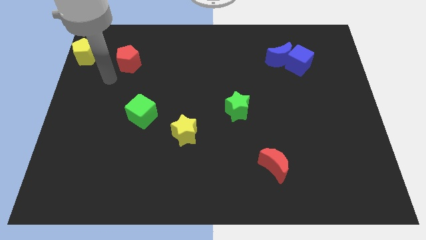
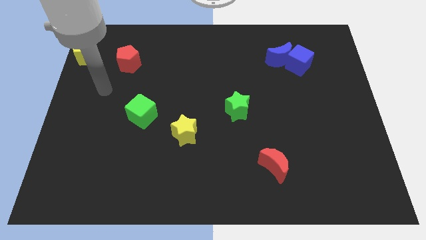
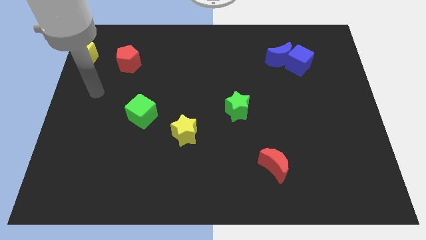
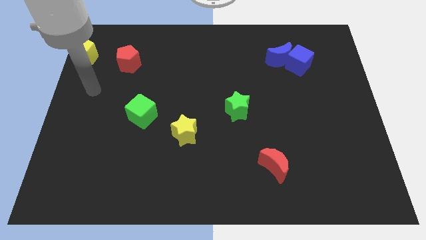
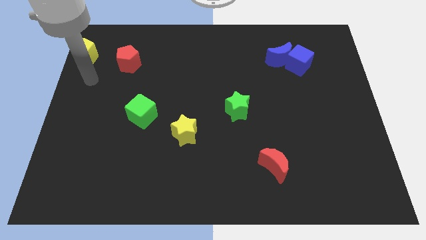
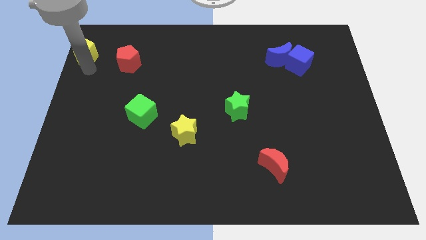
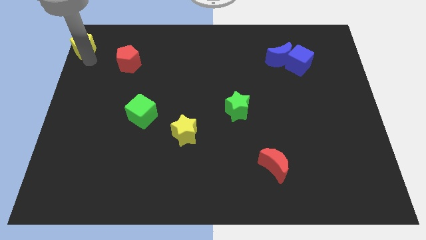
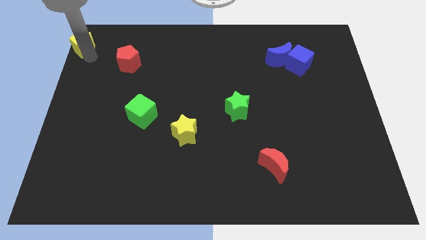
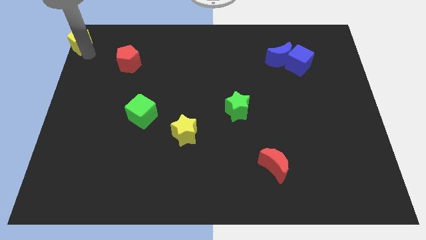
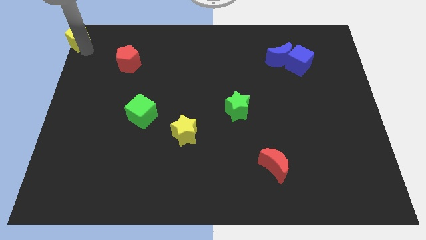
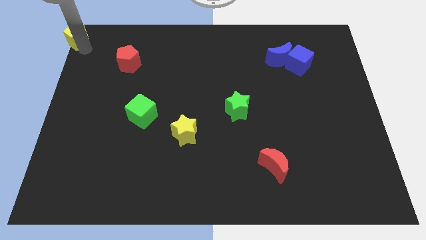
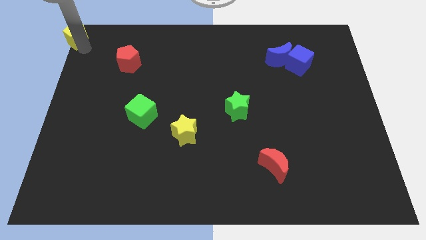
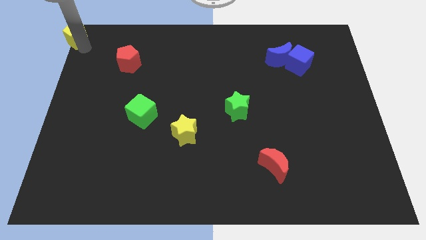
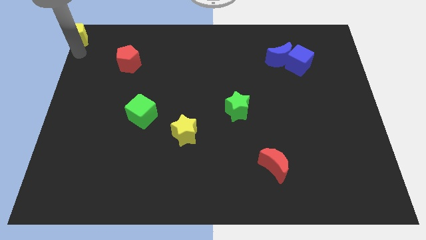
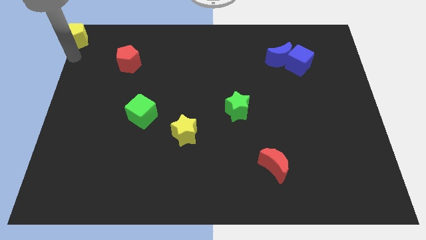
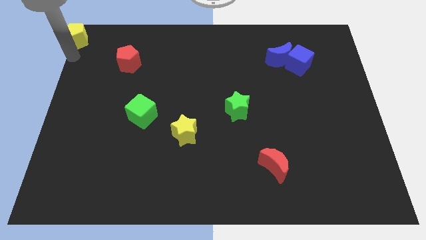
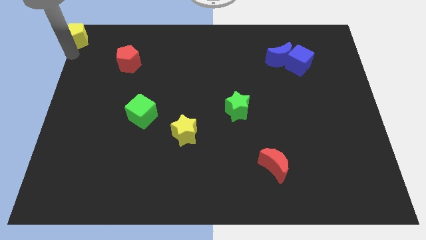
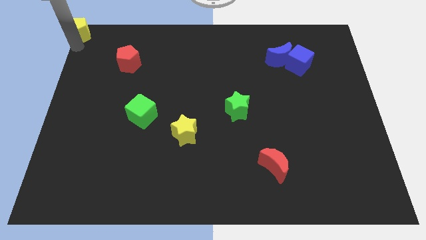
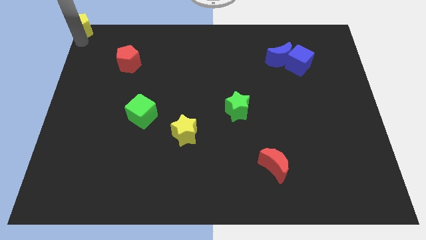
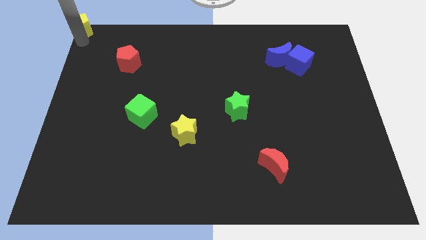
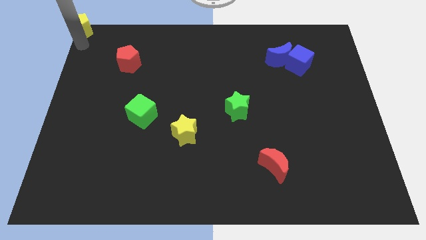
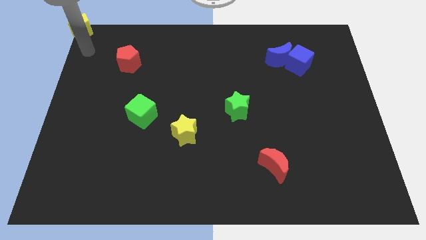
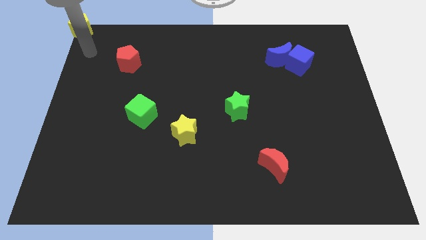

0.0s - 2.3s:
place yellow pentagon to the top left corner of board

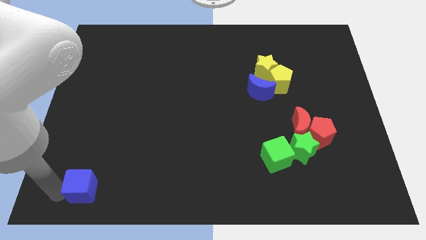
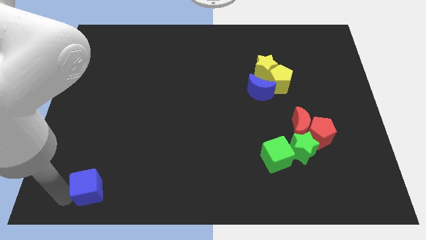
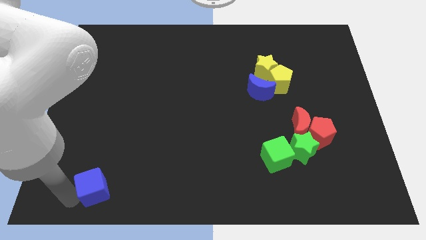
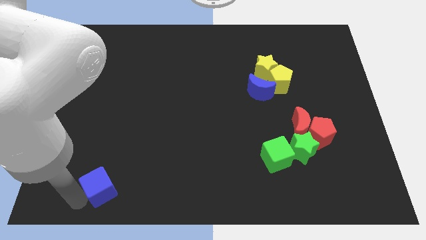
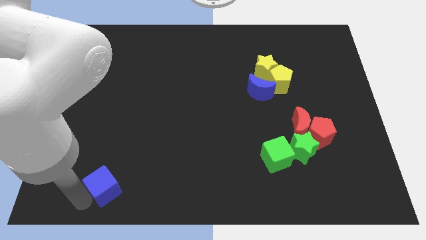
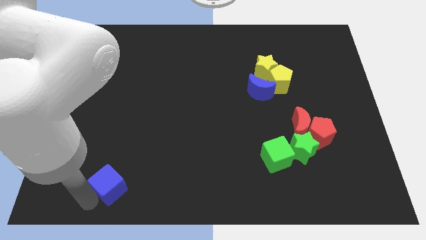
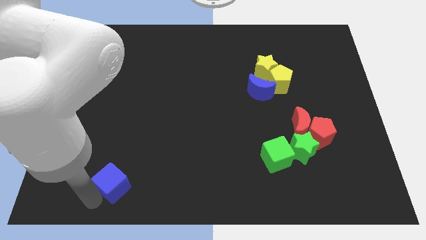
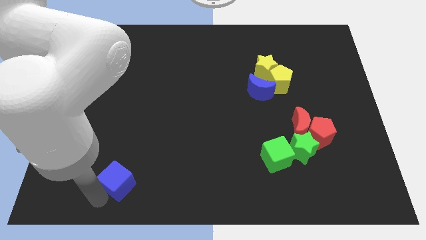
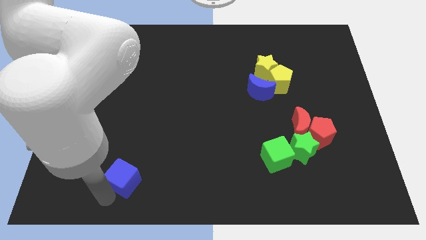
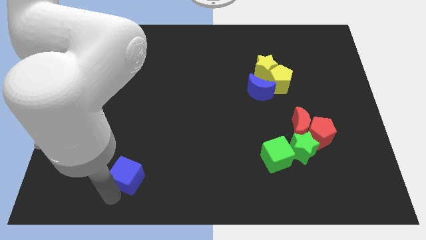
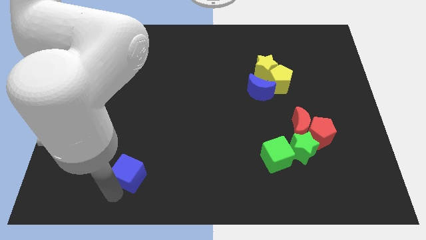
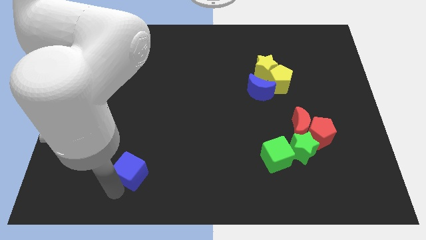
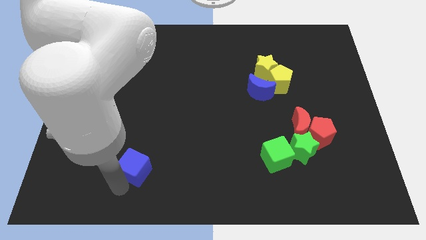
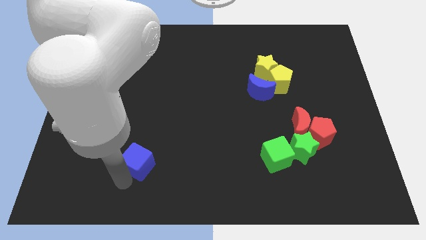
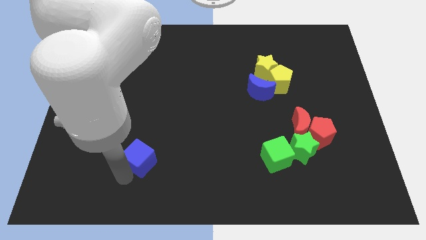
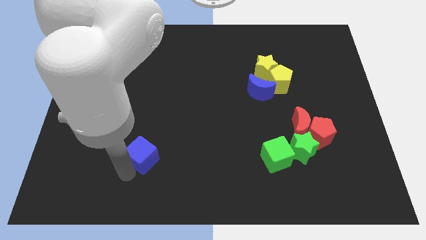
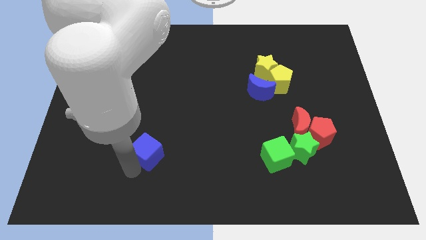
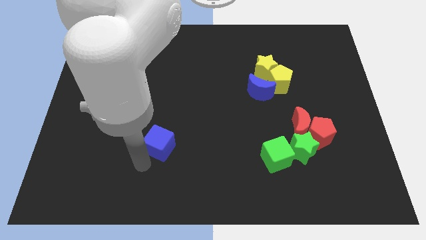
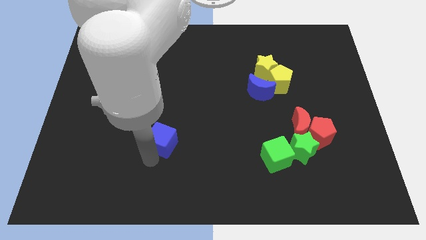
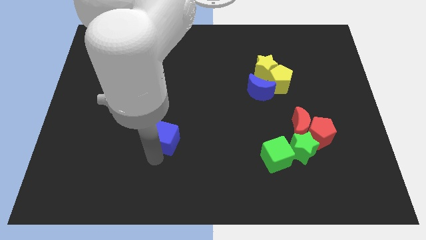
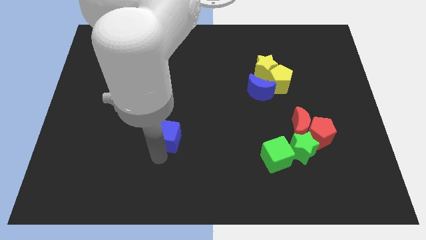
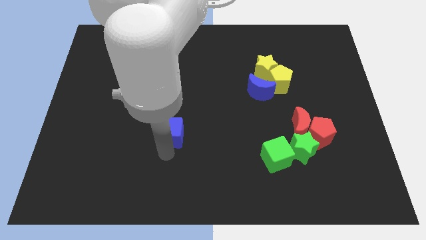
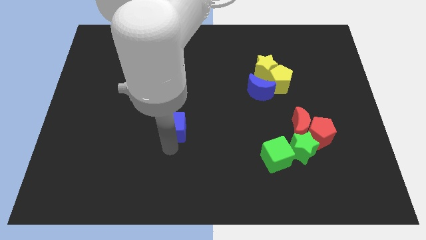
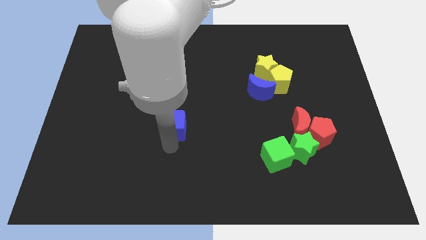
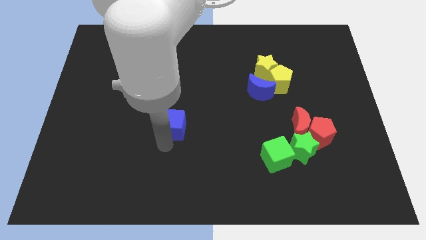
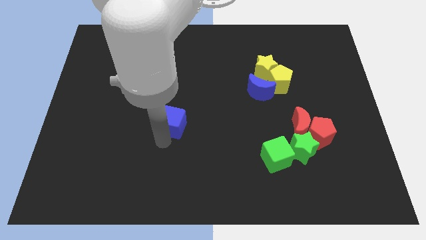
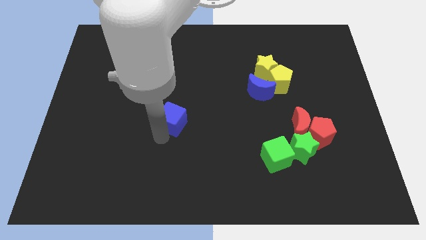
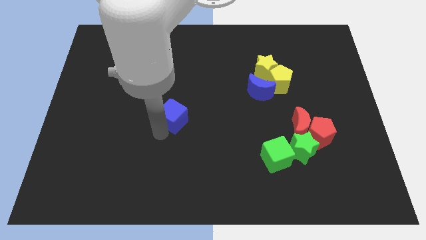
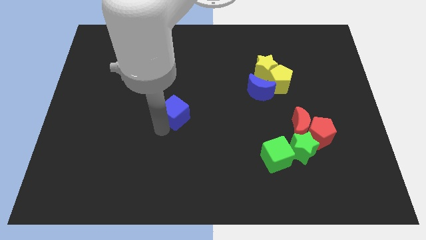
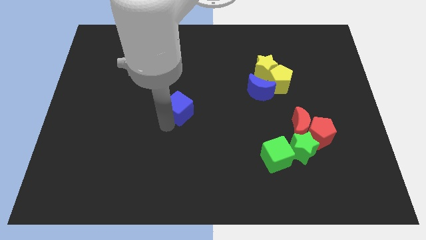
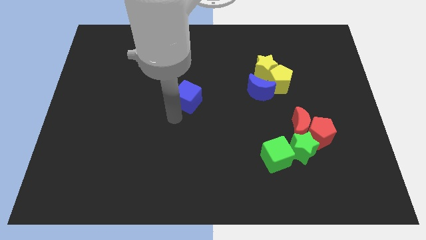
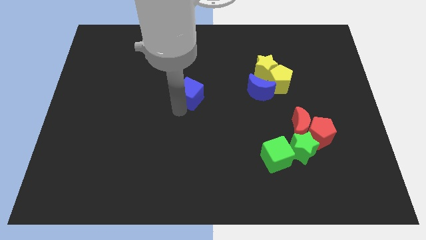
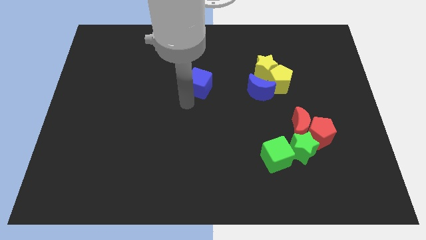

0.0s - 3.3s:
move the blue cube towards top center

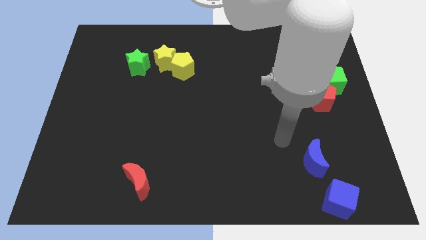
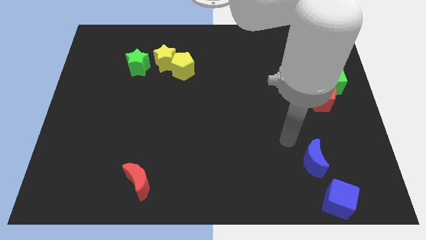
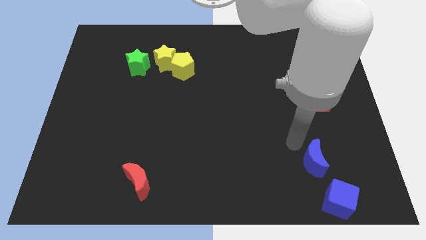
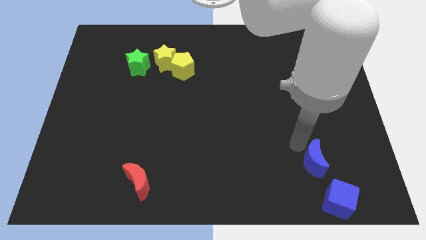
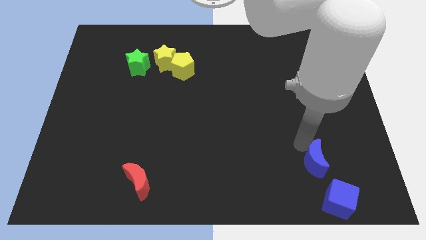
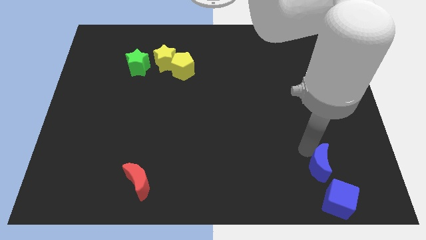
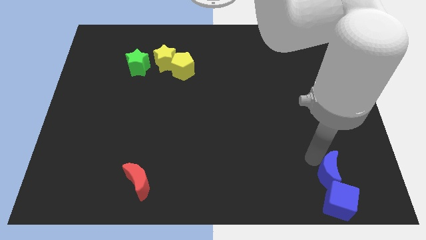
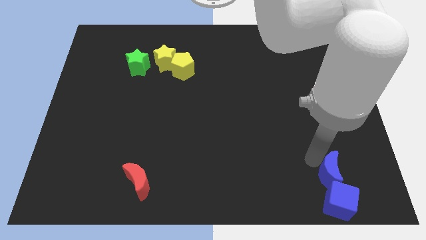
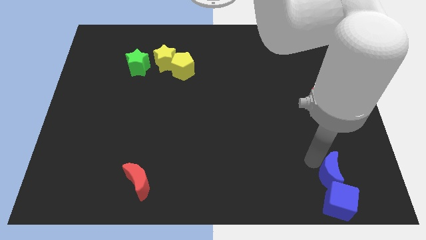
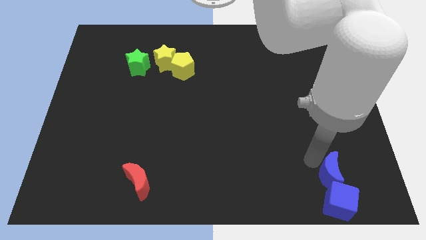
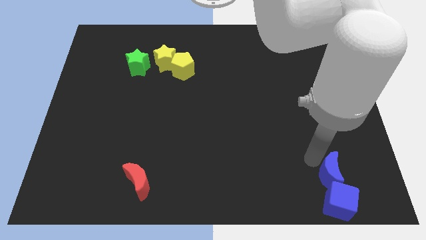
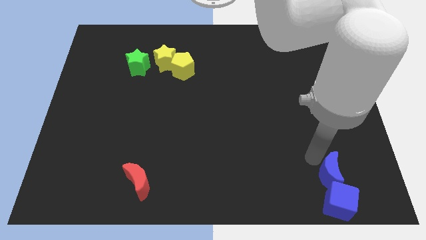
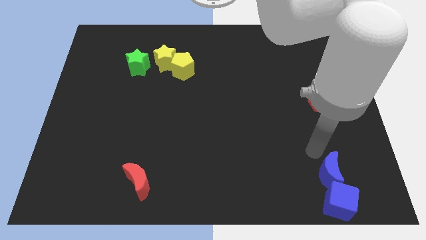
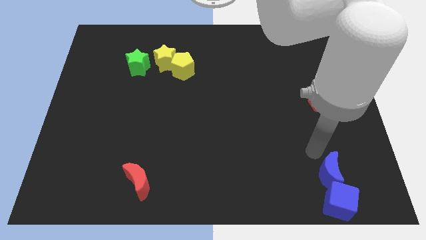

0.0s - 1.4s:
push the blue crescent into the blue cube

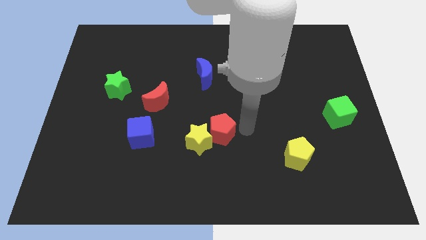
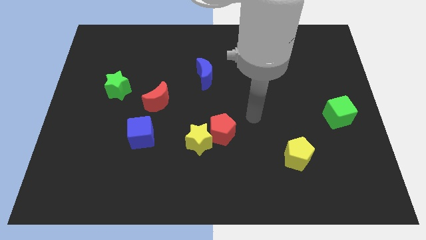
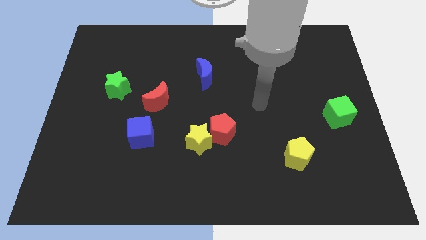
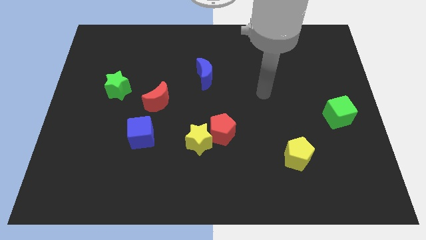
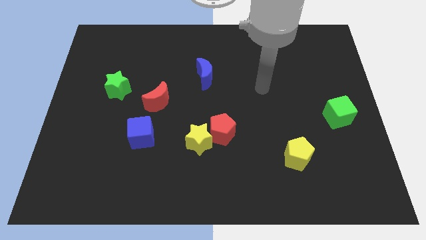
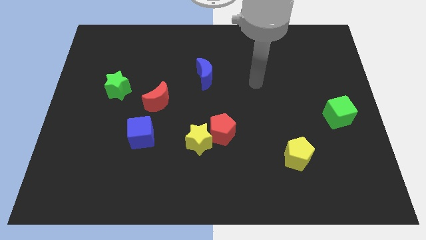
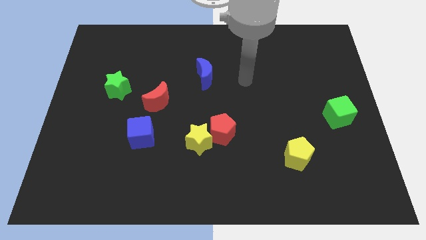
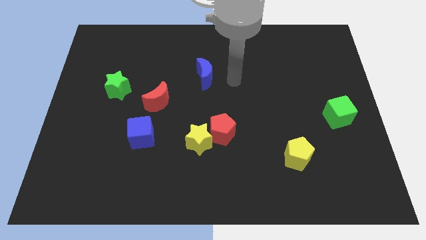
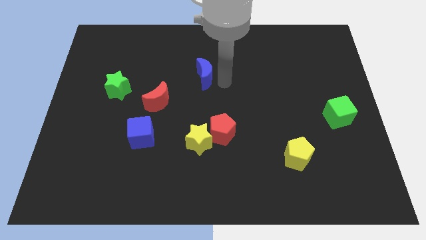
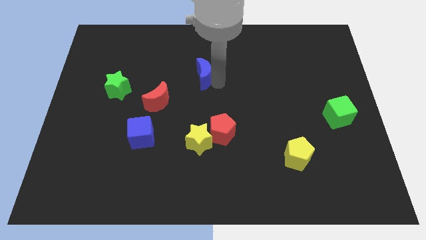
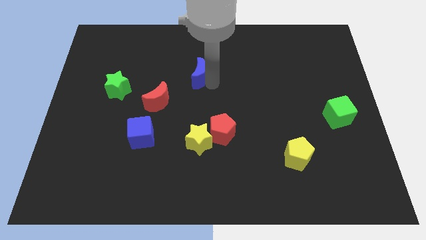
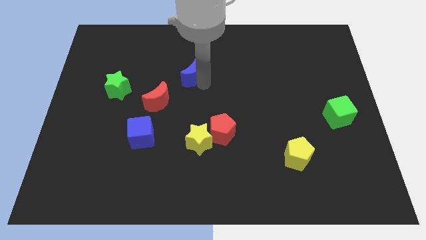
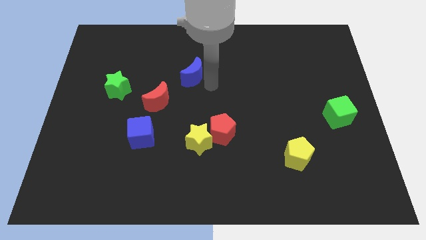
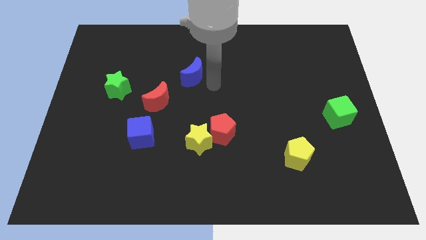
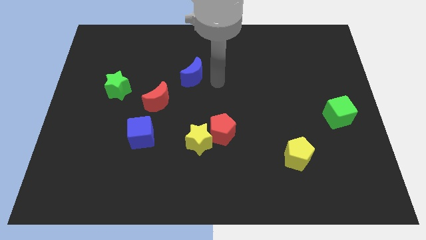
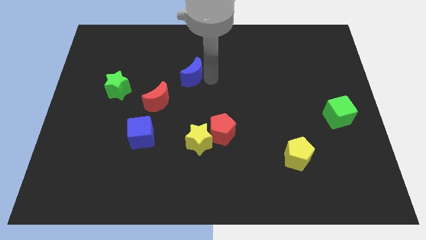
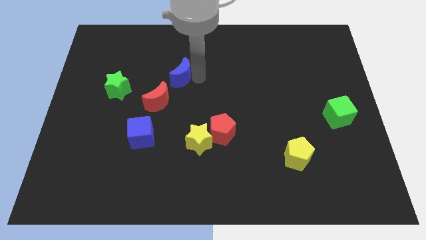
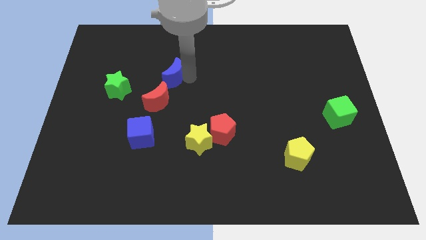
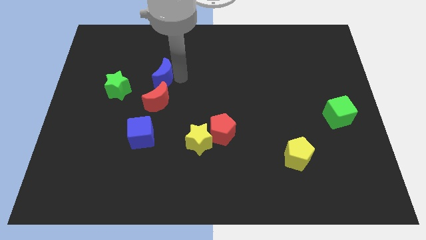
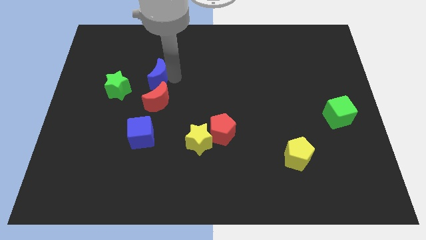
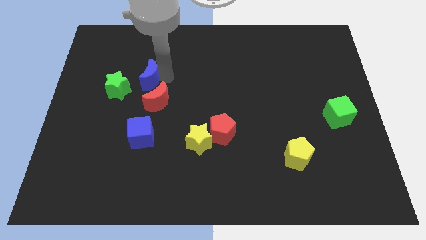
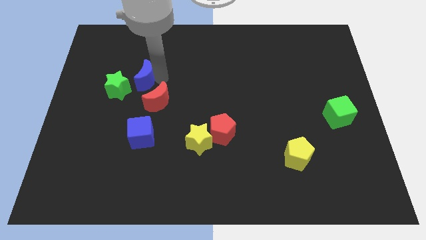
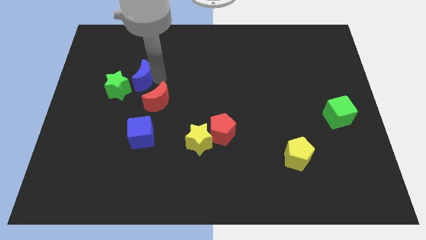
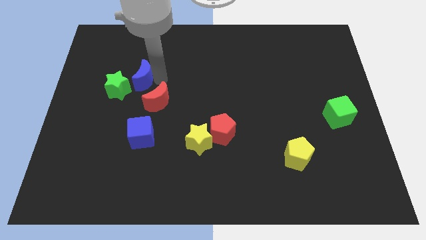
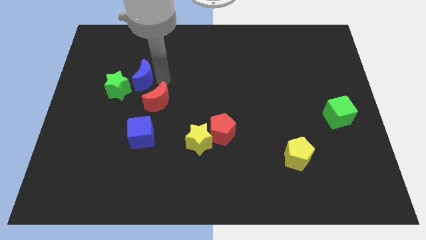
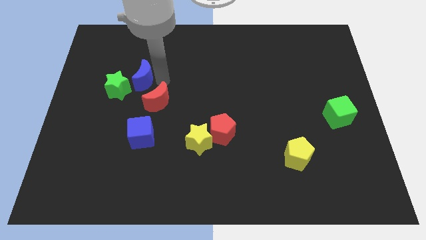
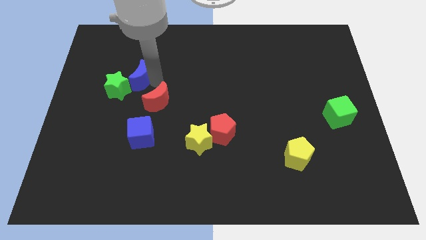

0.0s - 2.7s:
place the blue moon above the red moon
